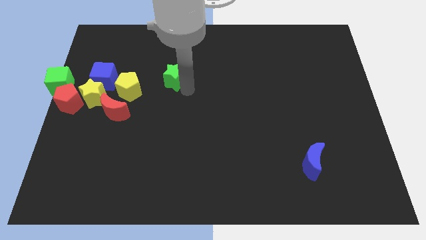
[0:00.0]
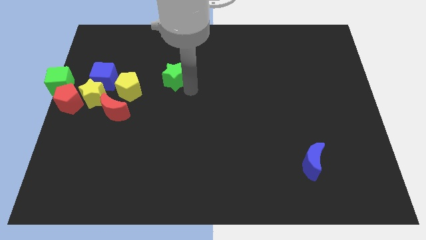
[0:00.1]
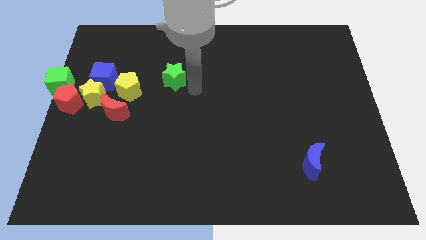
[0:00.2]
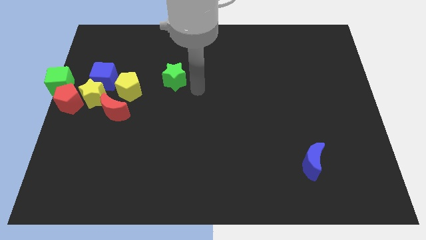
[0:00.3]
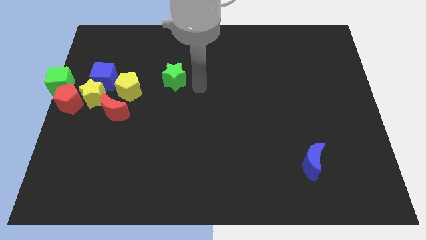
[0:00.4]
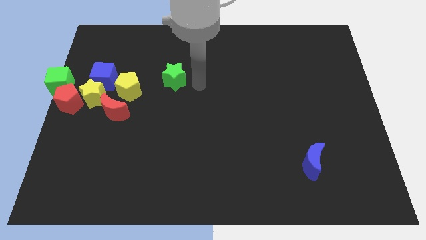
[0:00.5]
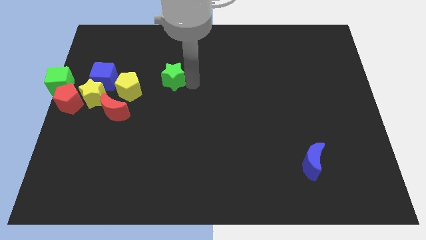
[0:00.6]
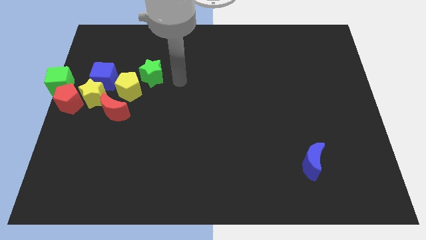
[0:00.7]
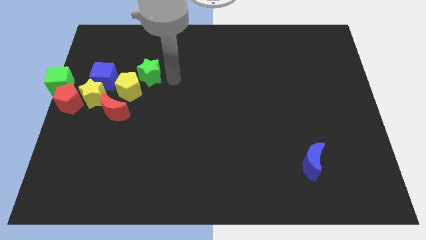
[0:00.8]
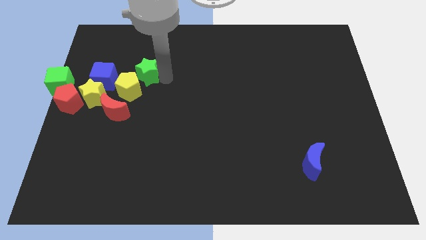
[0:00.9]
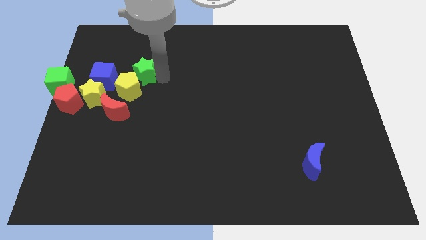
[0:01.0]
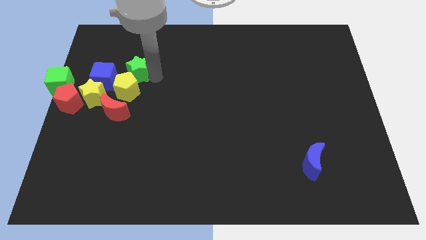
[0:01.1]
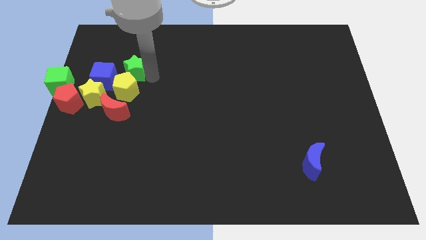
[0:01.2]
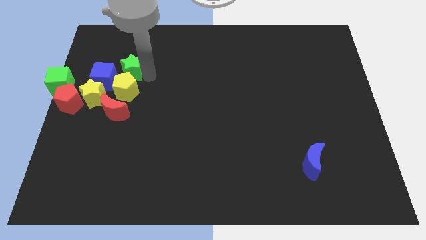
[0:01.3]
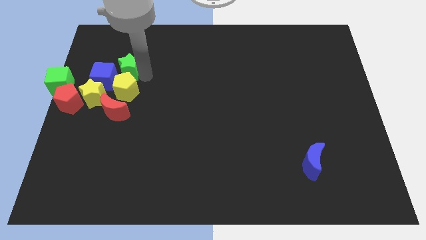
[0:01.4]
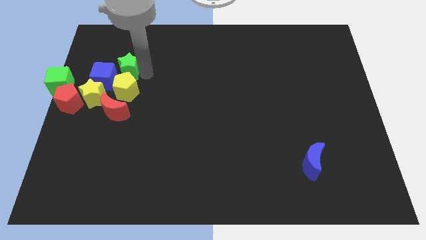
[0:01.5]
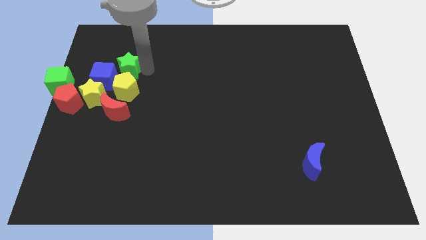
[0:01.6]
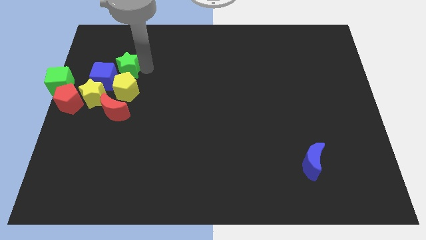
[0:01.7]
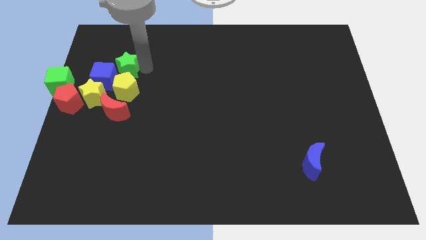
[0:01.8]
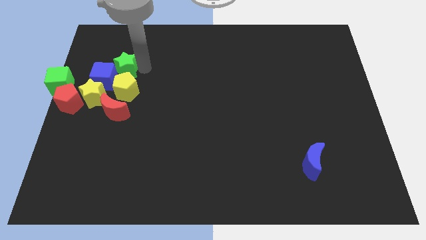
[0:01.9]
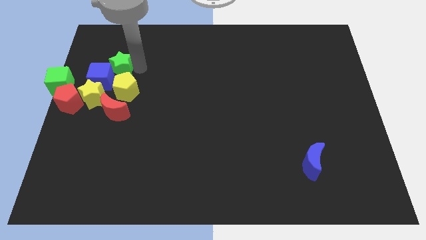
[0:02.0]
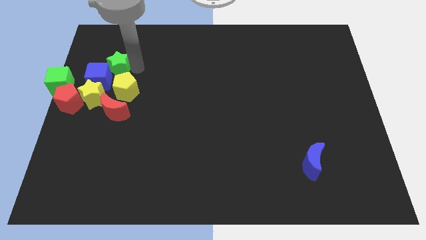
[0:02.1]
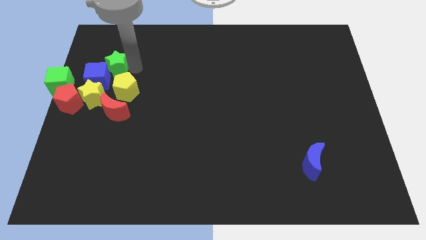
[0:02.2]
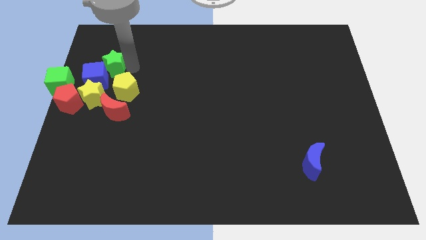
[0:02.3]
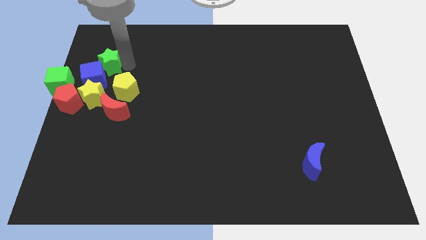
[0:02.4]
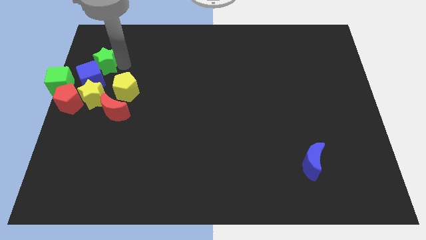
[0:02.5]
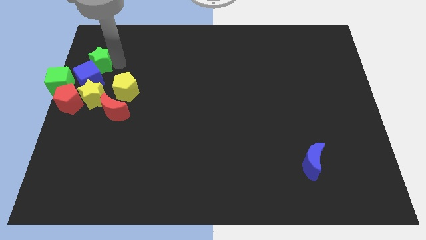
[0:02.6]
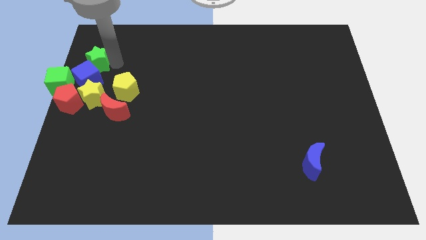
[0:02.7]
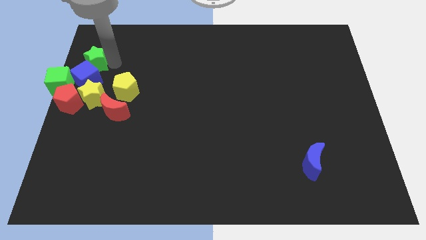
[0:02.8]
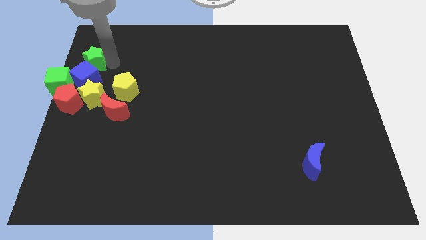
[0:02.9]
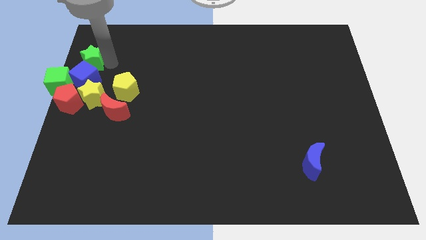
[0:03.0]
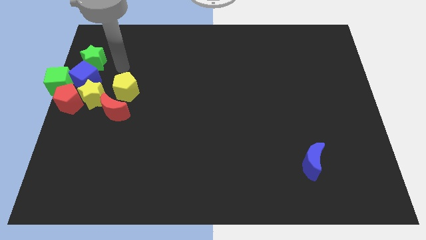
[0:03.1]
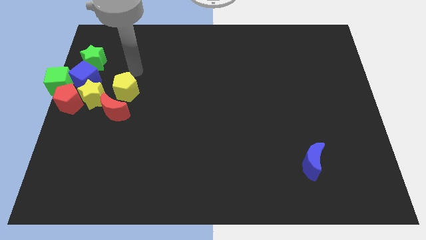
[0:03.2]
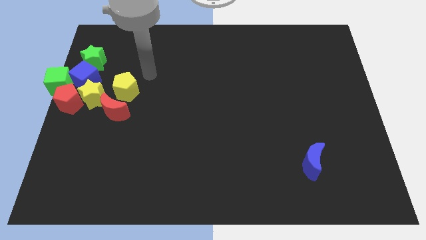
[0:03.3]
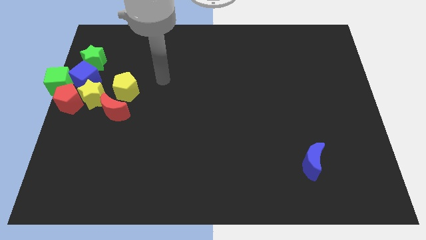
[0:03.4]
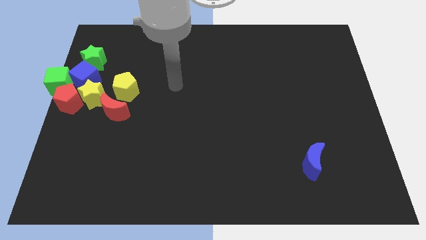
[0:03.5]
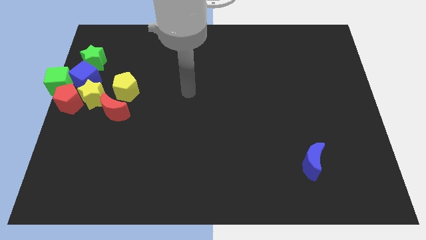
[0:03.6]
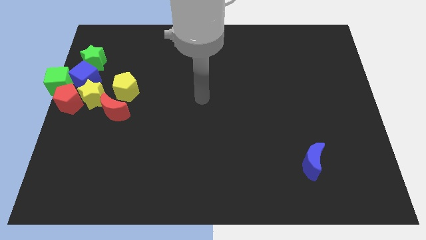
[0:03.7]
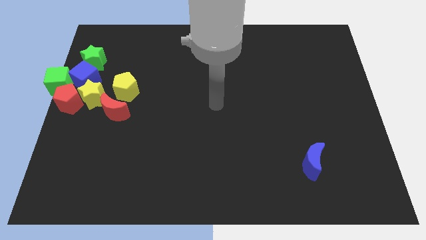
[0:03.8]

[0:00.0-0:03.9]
push the green star into the blue cube

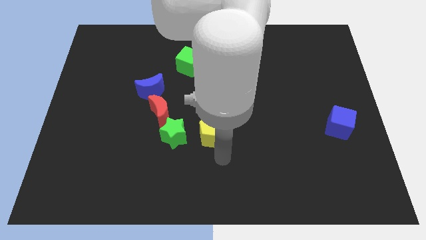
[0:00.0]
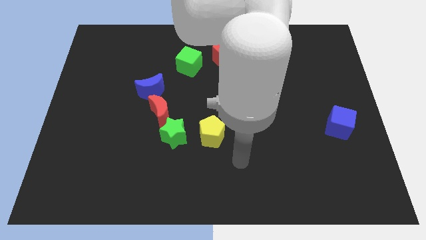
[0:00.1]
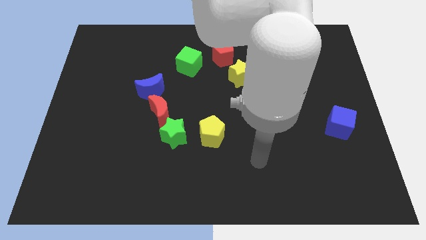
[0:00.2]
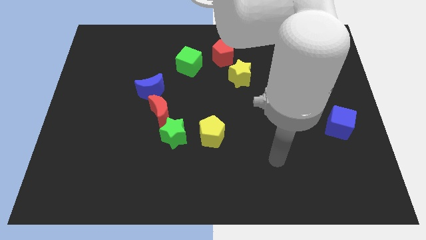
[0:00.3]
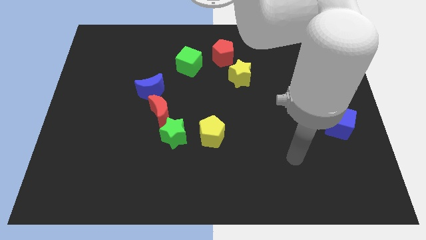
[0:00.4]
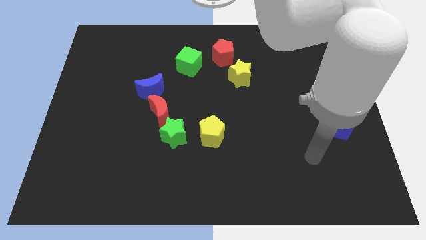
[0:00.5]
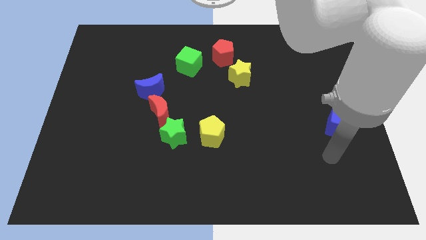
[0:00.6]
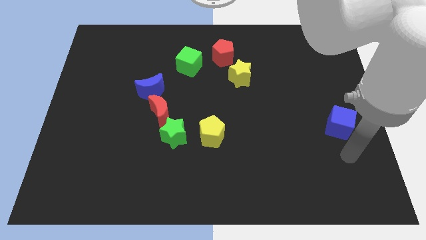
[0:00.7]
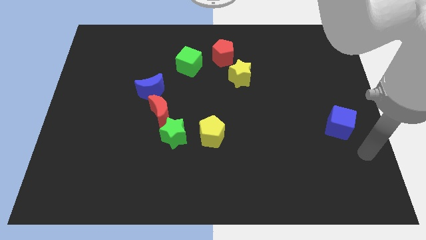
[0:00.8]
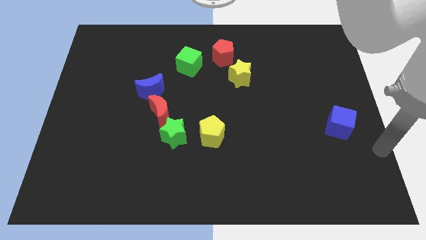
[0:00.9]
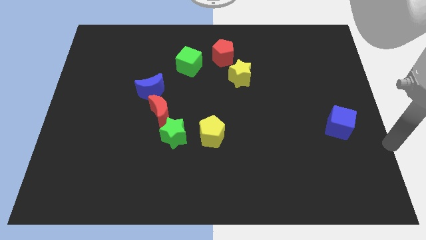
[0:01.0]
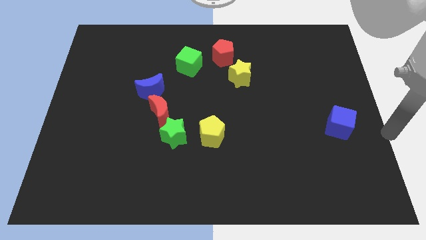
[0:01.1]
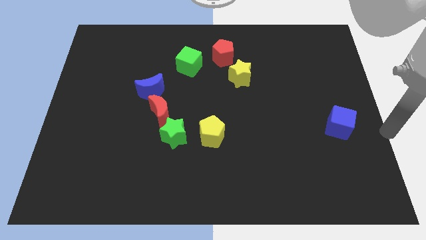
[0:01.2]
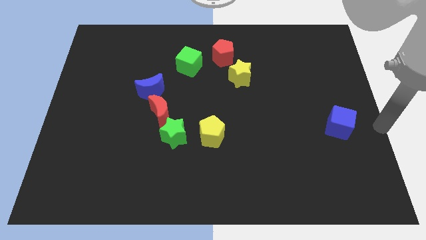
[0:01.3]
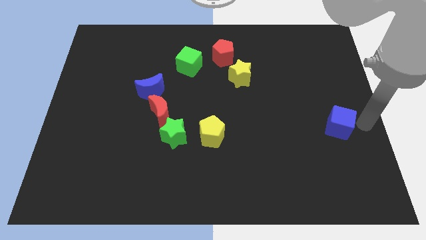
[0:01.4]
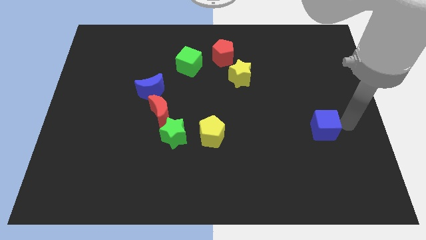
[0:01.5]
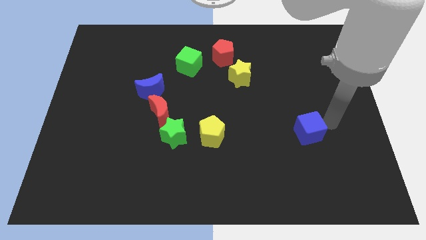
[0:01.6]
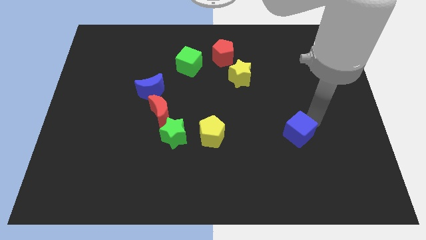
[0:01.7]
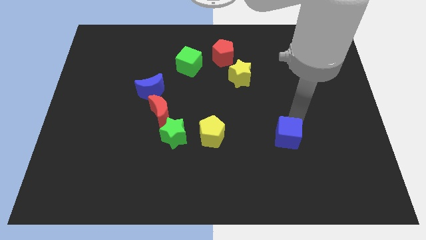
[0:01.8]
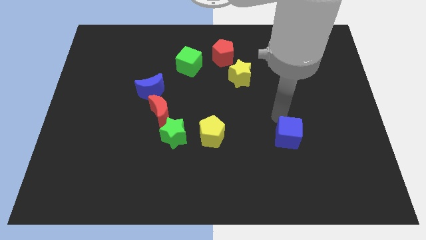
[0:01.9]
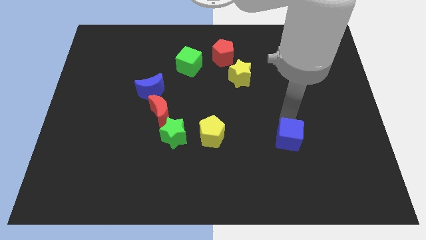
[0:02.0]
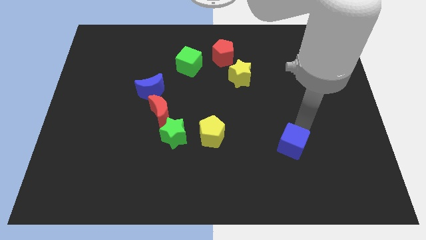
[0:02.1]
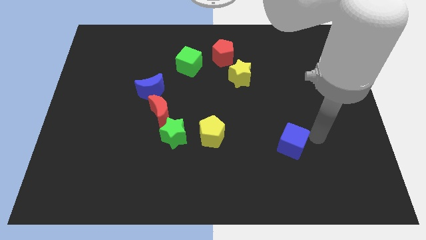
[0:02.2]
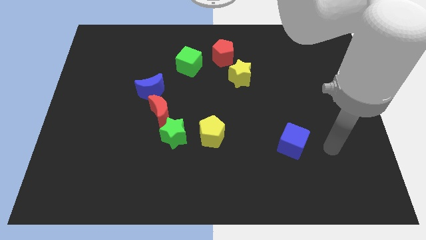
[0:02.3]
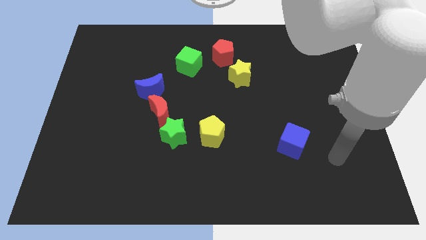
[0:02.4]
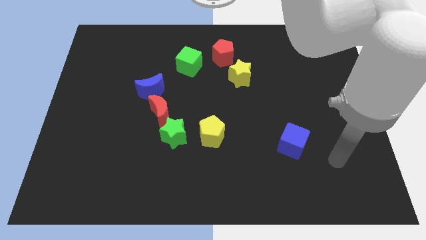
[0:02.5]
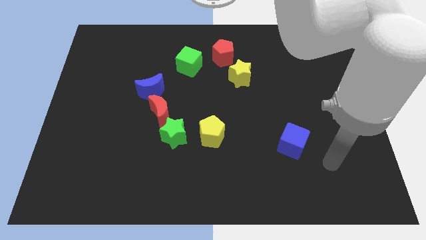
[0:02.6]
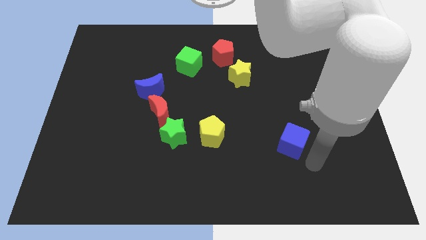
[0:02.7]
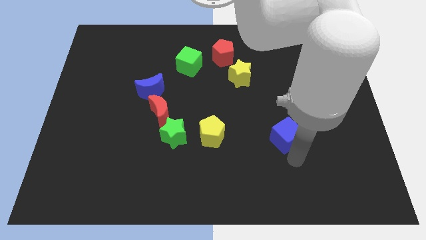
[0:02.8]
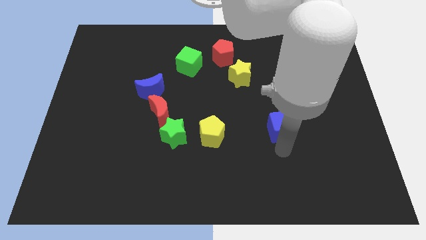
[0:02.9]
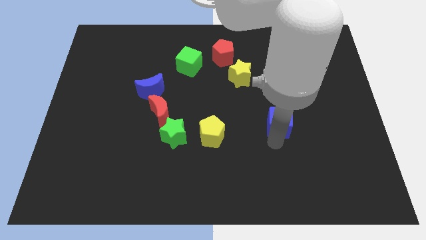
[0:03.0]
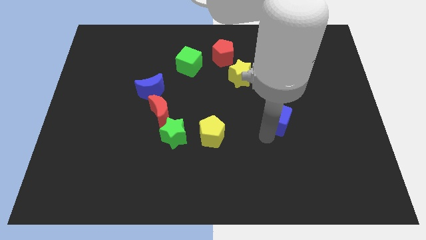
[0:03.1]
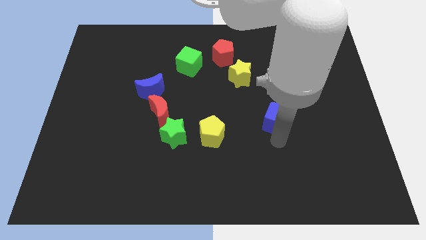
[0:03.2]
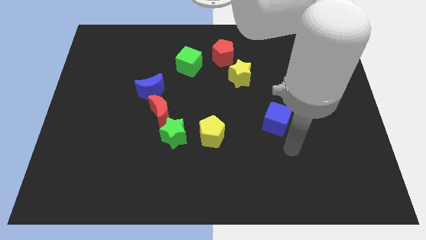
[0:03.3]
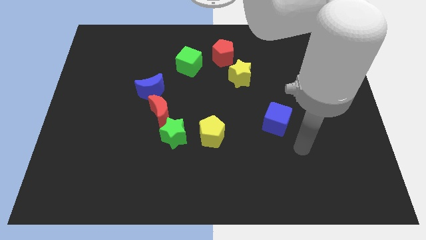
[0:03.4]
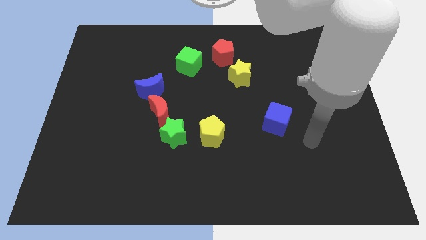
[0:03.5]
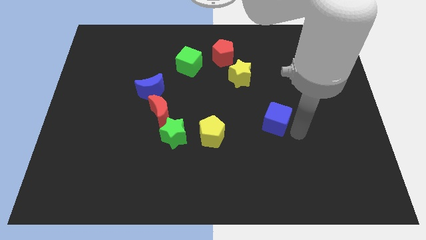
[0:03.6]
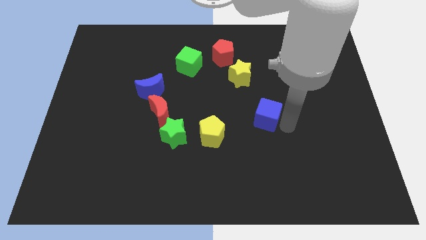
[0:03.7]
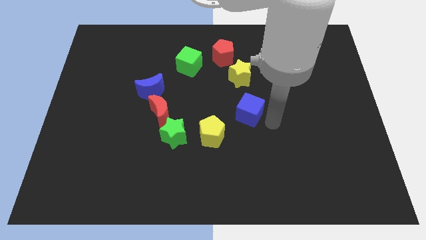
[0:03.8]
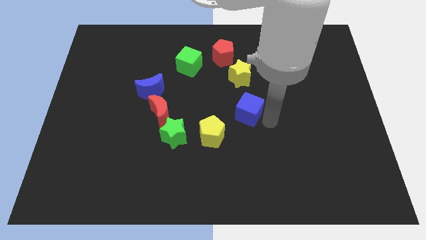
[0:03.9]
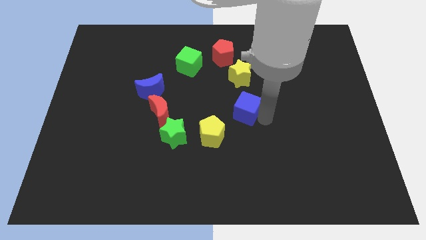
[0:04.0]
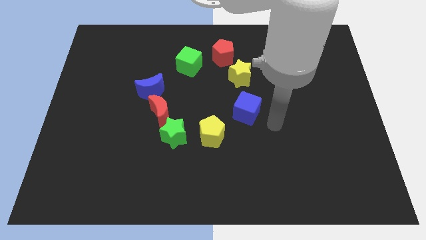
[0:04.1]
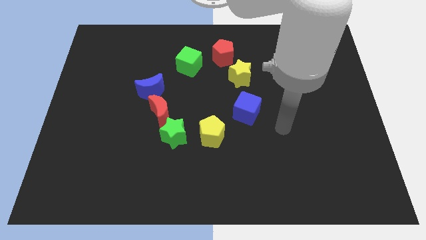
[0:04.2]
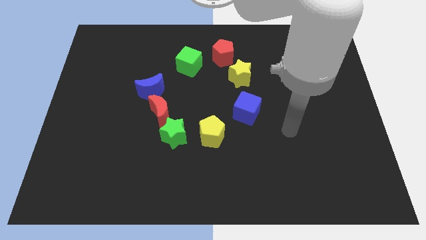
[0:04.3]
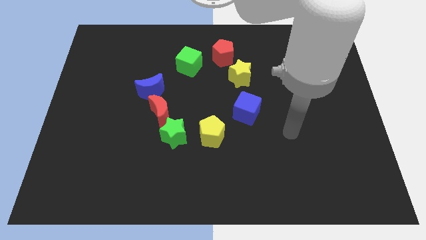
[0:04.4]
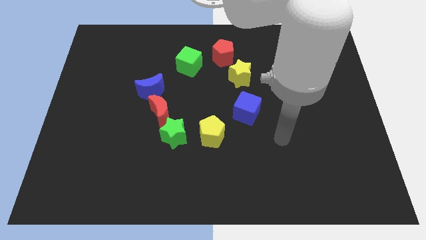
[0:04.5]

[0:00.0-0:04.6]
place the blue cube below the yellow star

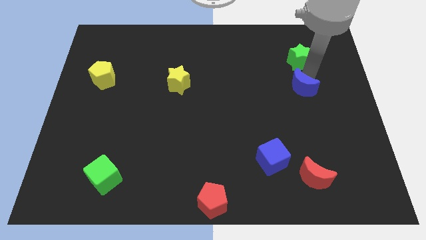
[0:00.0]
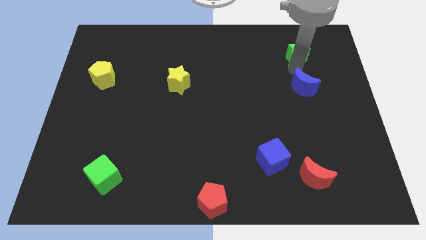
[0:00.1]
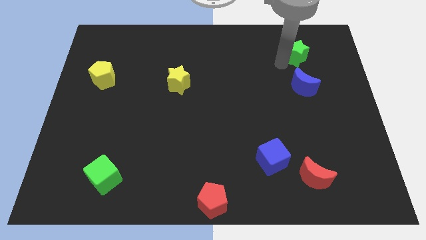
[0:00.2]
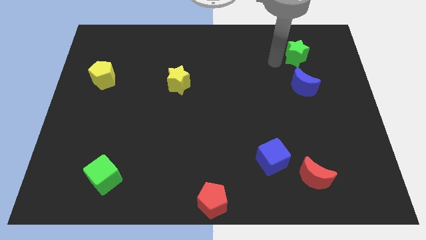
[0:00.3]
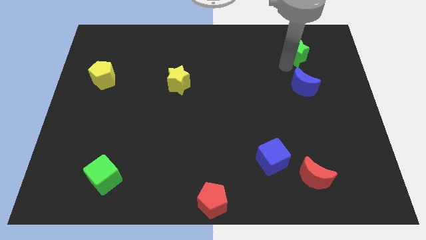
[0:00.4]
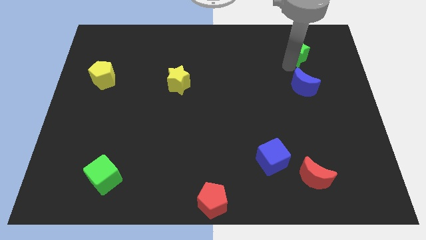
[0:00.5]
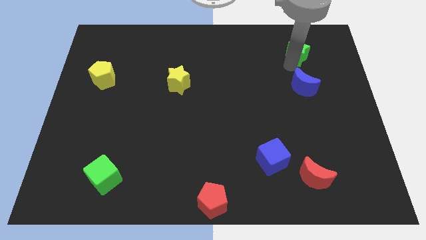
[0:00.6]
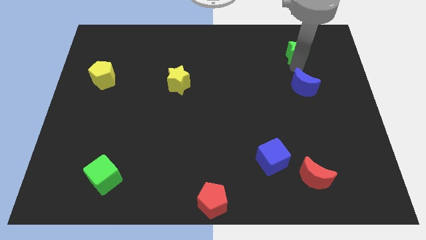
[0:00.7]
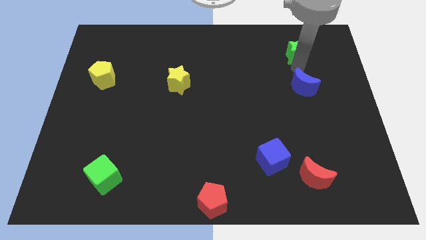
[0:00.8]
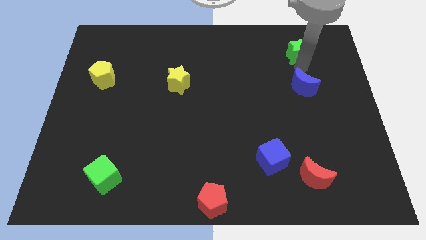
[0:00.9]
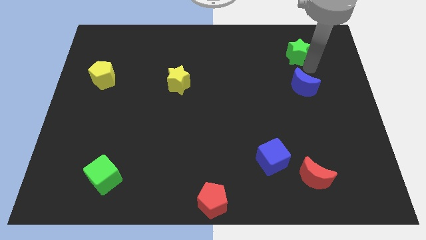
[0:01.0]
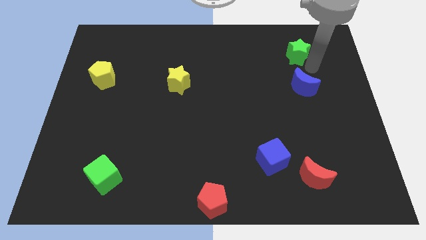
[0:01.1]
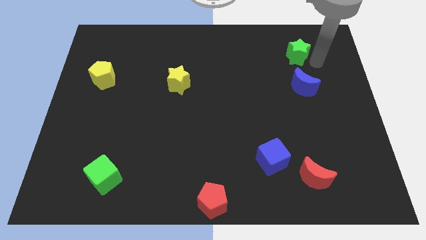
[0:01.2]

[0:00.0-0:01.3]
move the green star slightly upwards
